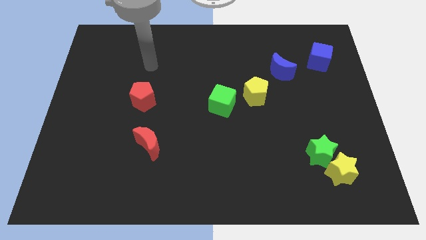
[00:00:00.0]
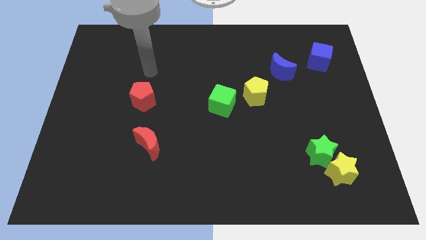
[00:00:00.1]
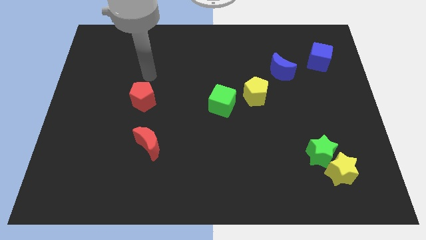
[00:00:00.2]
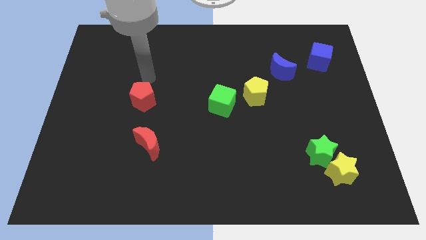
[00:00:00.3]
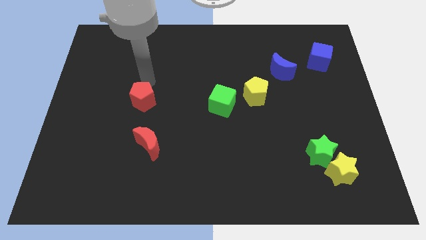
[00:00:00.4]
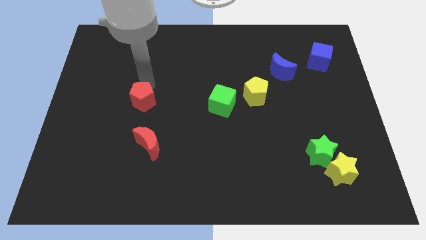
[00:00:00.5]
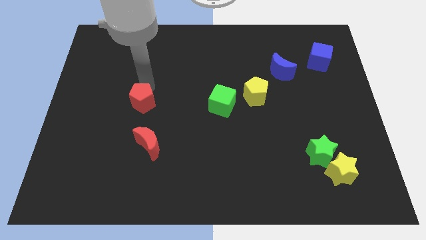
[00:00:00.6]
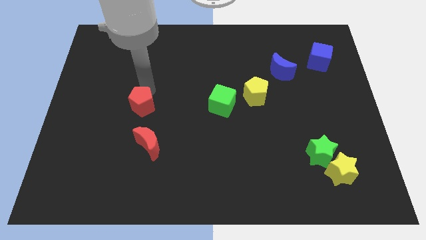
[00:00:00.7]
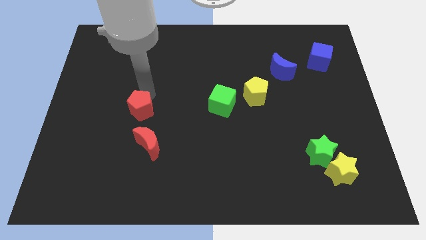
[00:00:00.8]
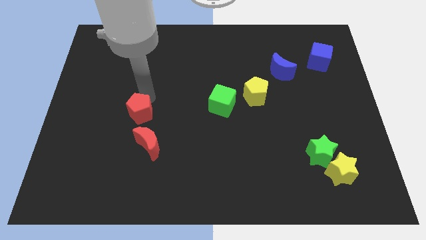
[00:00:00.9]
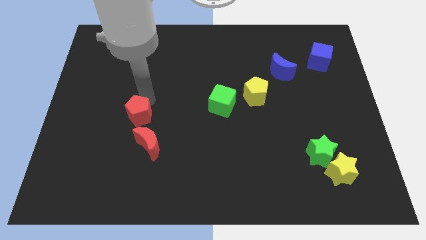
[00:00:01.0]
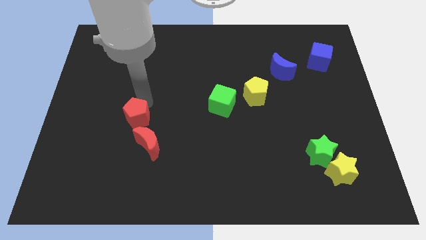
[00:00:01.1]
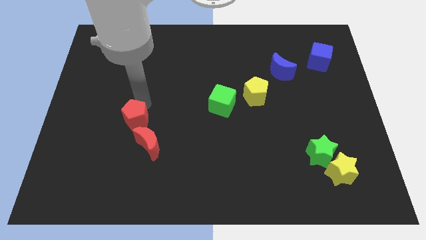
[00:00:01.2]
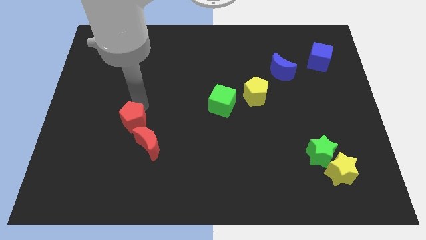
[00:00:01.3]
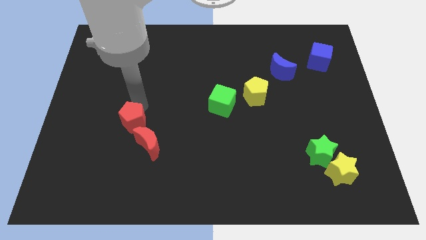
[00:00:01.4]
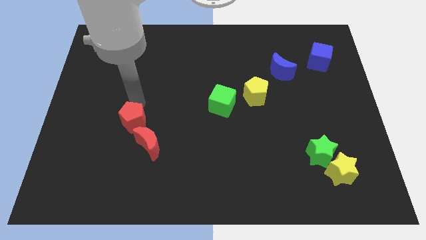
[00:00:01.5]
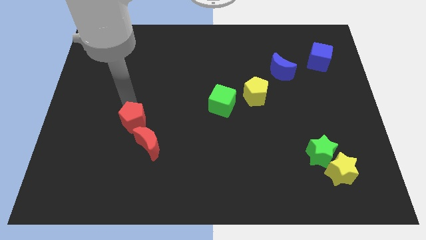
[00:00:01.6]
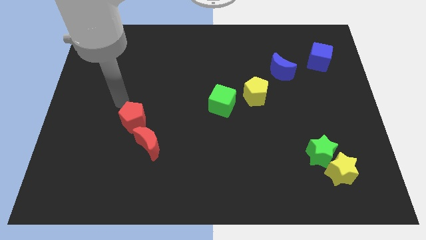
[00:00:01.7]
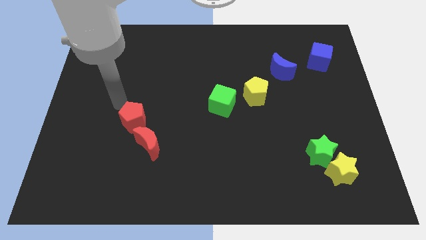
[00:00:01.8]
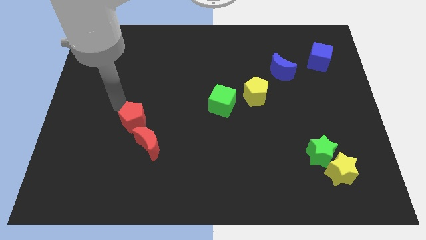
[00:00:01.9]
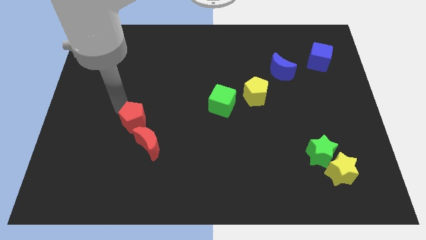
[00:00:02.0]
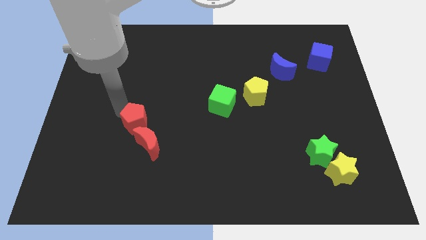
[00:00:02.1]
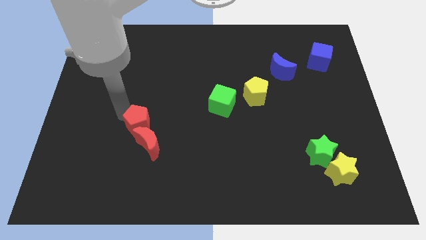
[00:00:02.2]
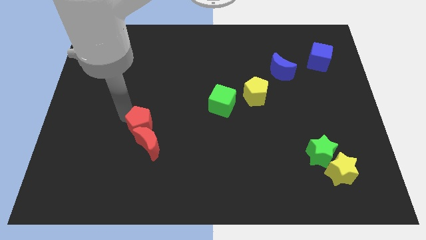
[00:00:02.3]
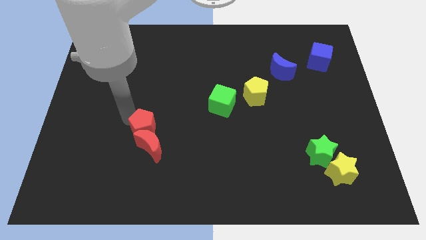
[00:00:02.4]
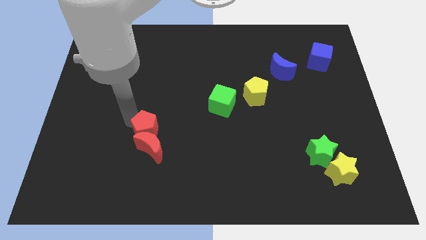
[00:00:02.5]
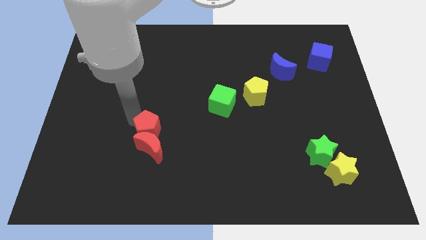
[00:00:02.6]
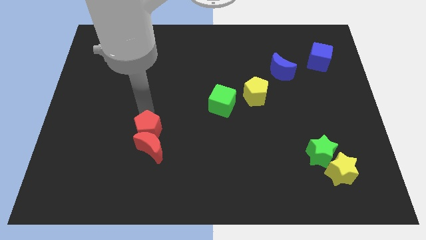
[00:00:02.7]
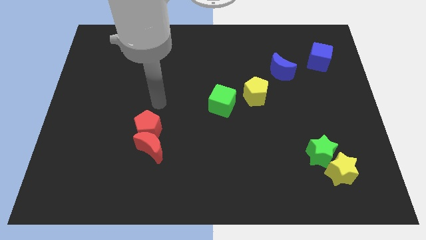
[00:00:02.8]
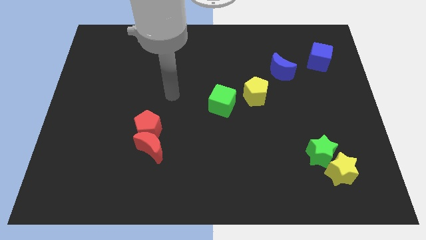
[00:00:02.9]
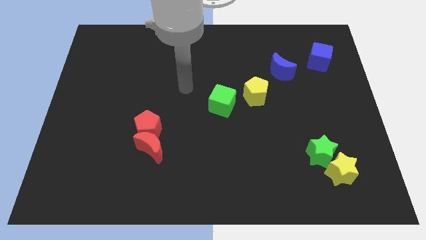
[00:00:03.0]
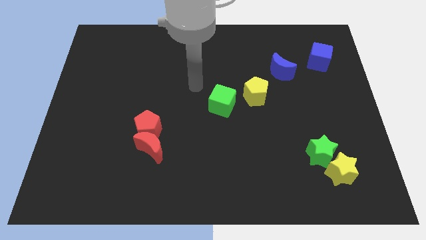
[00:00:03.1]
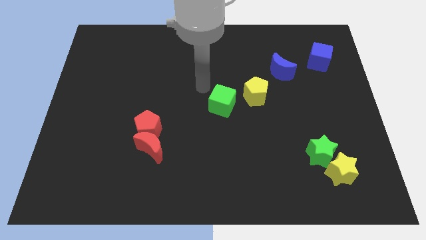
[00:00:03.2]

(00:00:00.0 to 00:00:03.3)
place red pentagon above the red crescent

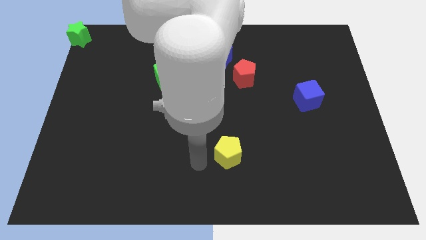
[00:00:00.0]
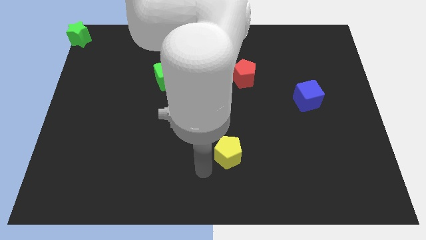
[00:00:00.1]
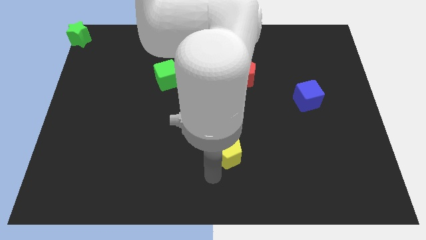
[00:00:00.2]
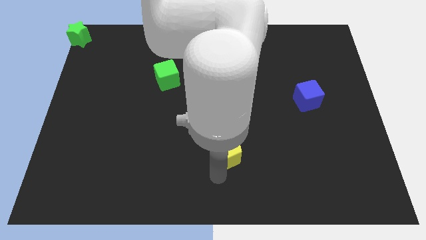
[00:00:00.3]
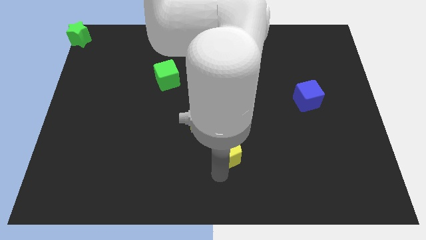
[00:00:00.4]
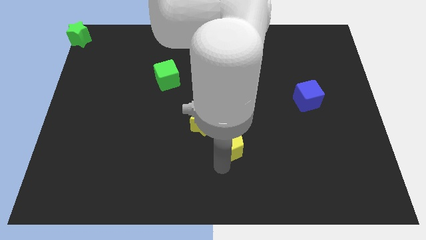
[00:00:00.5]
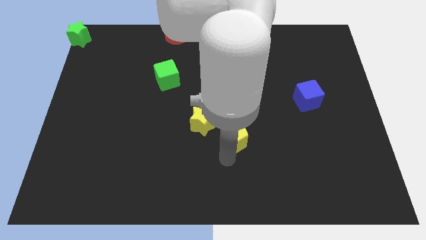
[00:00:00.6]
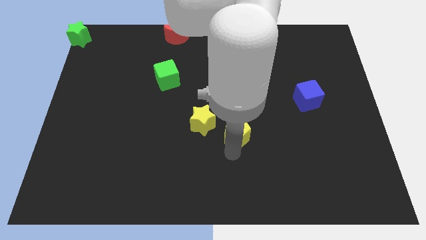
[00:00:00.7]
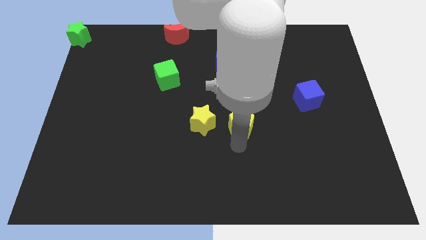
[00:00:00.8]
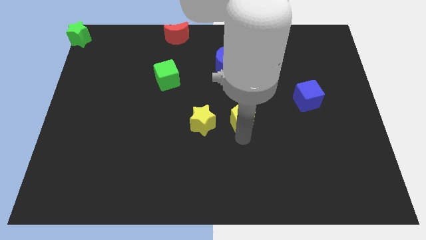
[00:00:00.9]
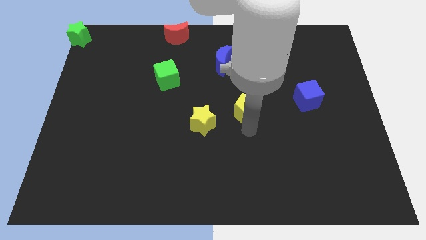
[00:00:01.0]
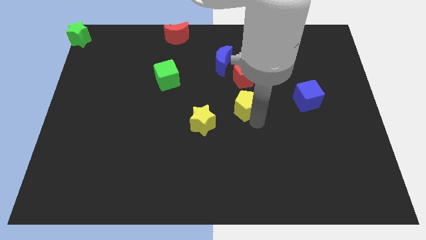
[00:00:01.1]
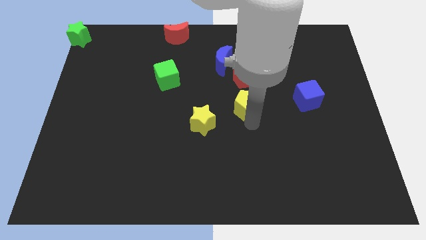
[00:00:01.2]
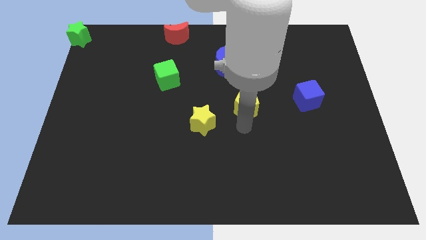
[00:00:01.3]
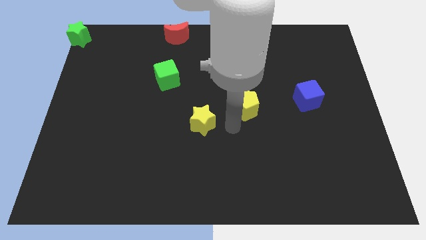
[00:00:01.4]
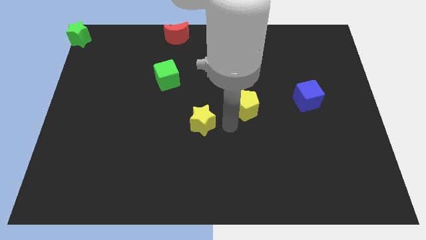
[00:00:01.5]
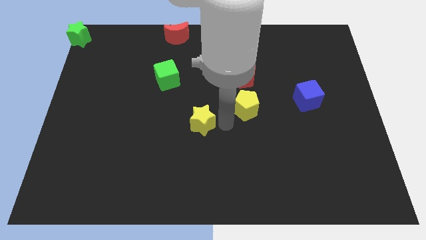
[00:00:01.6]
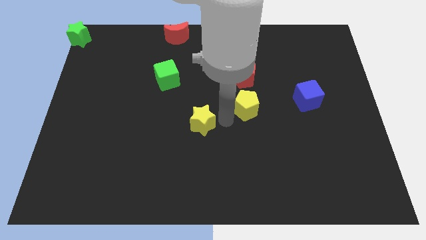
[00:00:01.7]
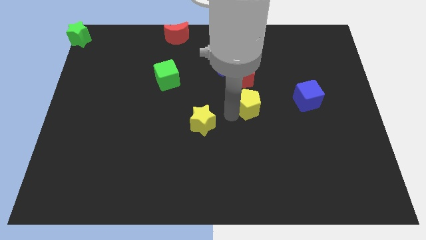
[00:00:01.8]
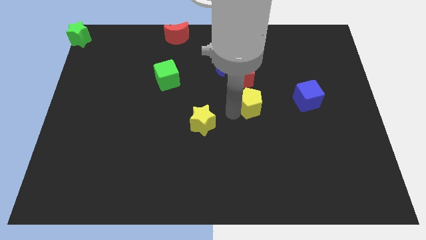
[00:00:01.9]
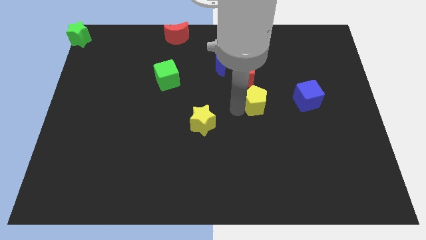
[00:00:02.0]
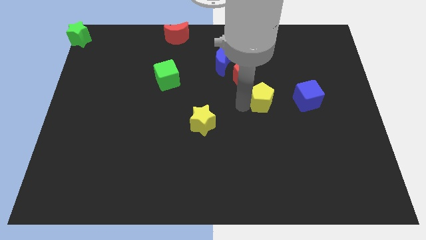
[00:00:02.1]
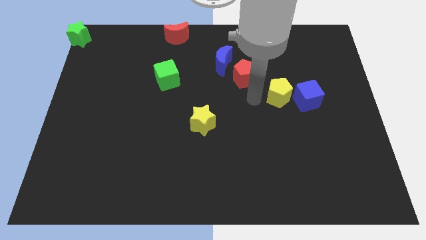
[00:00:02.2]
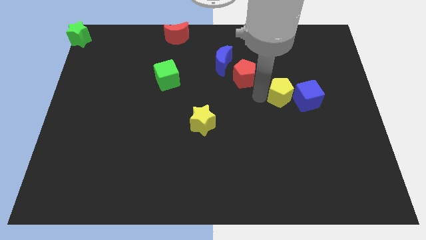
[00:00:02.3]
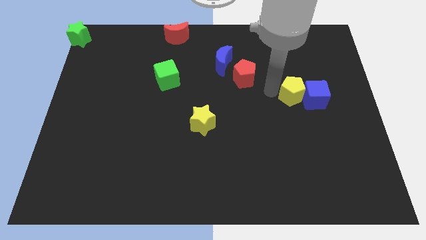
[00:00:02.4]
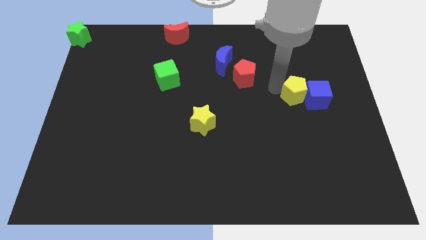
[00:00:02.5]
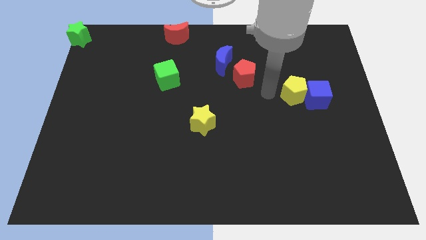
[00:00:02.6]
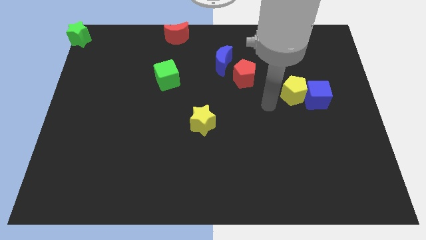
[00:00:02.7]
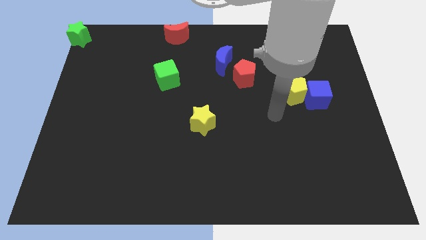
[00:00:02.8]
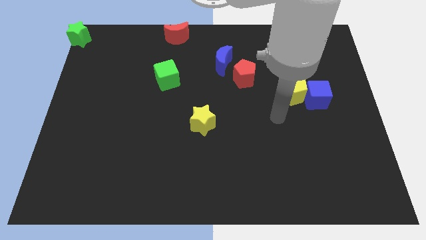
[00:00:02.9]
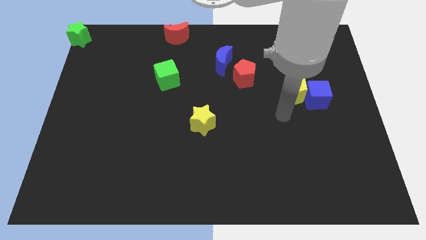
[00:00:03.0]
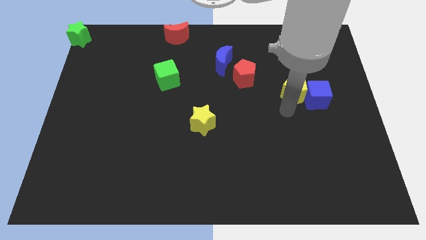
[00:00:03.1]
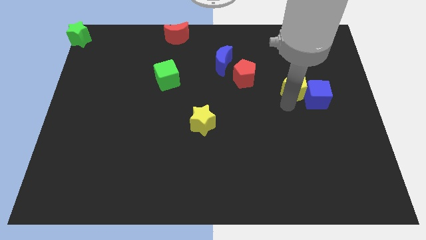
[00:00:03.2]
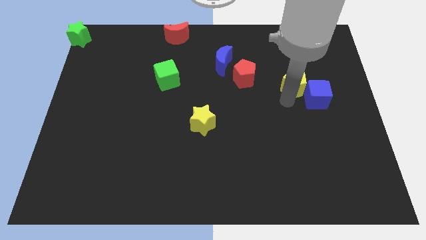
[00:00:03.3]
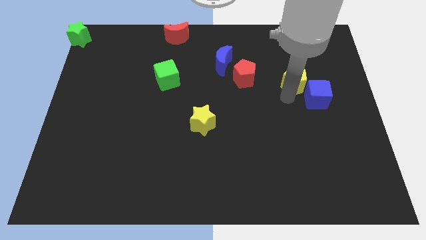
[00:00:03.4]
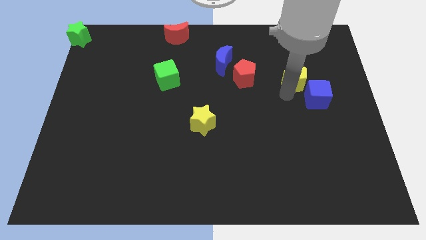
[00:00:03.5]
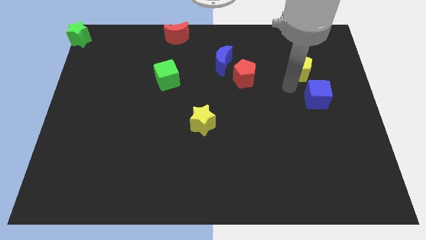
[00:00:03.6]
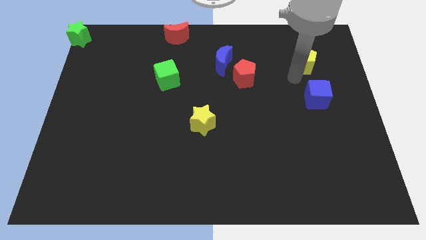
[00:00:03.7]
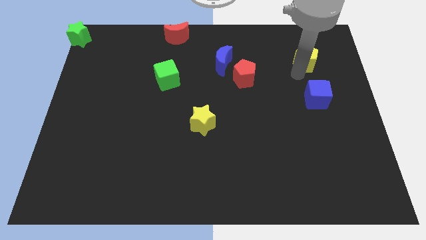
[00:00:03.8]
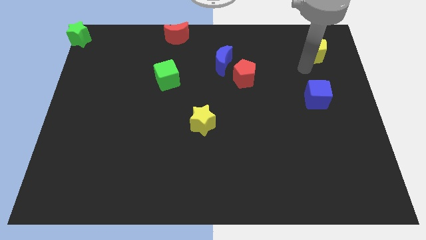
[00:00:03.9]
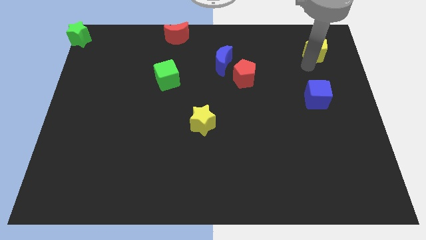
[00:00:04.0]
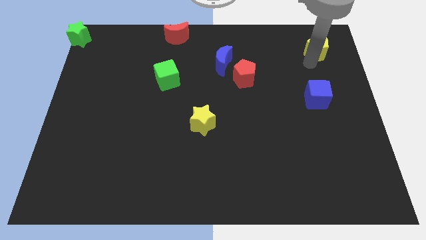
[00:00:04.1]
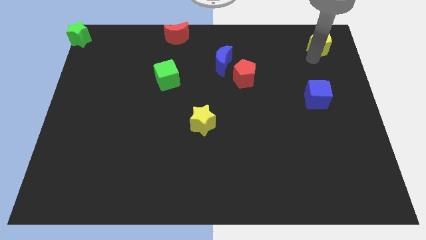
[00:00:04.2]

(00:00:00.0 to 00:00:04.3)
place yellow pentagon to the top of blue cube

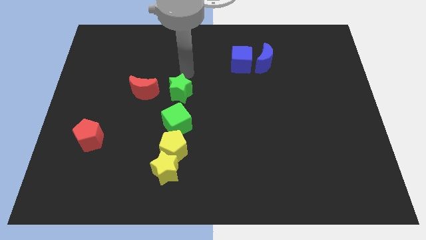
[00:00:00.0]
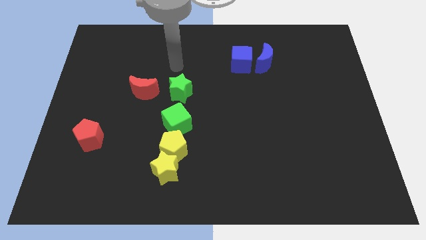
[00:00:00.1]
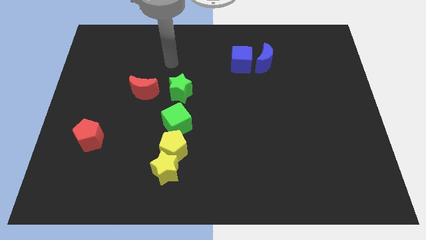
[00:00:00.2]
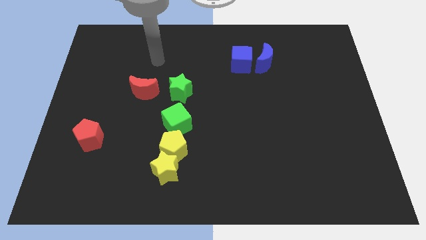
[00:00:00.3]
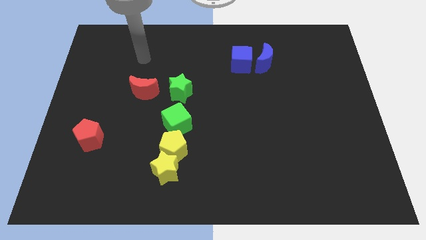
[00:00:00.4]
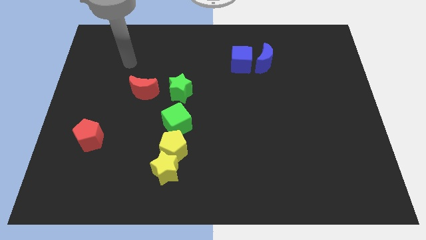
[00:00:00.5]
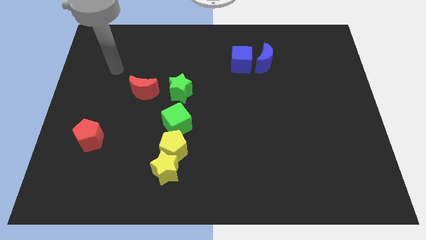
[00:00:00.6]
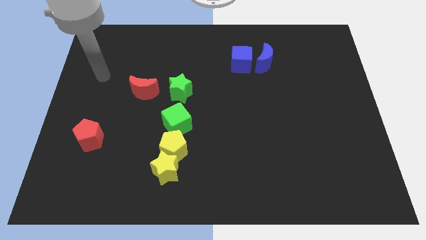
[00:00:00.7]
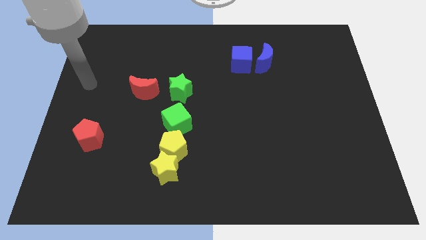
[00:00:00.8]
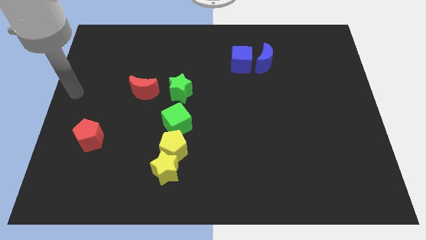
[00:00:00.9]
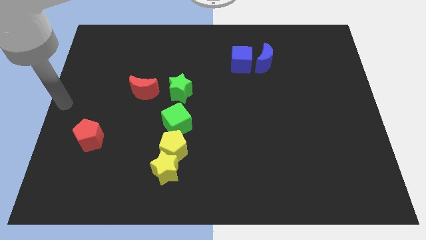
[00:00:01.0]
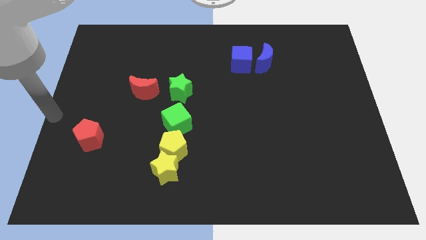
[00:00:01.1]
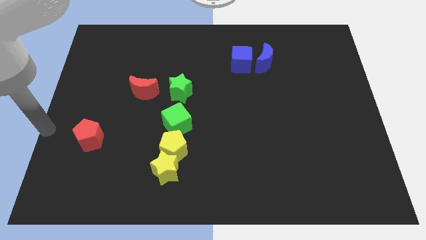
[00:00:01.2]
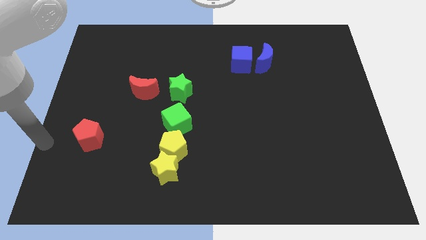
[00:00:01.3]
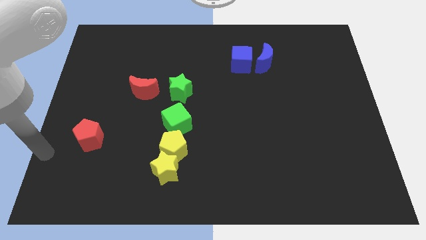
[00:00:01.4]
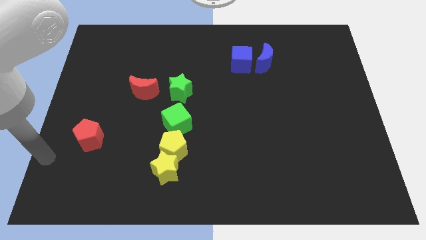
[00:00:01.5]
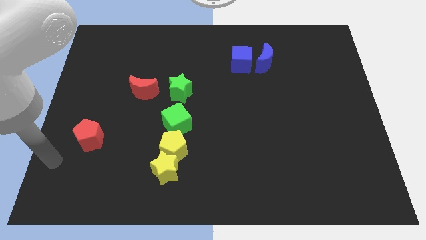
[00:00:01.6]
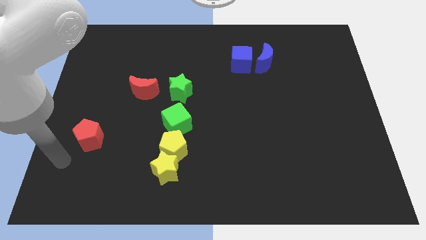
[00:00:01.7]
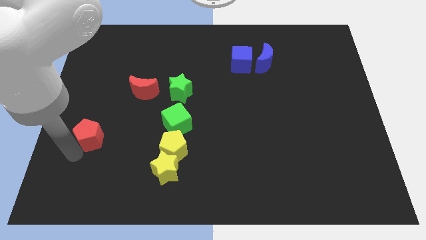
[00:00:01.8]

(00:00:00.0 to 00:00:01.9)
point your arm to the bottom left side of the red pentagon
